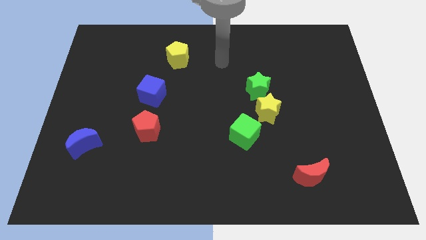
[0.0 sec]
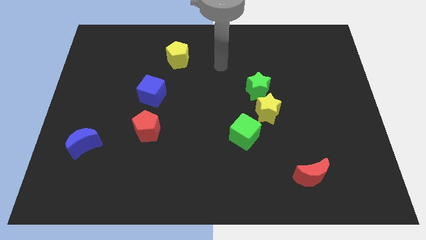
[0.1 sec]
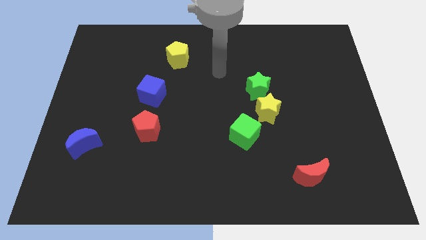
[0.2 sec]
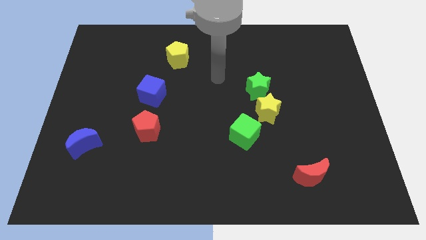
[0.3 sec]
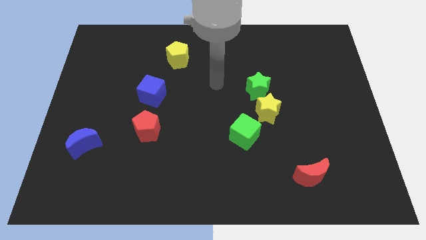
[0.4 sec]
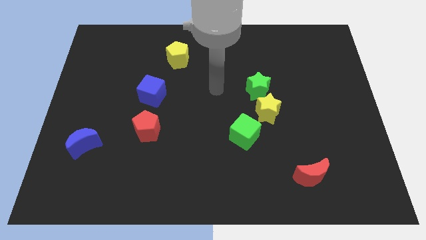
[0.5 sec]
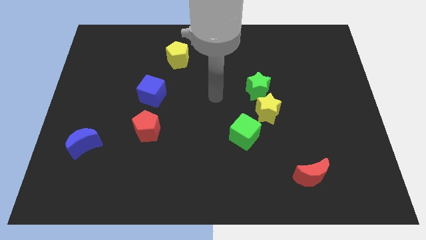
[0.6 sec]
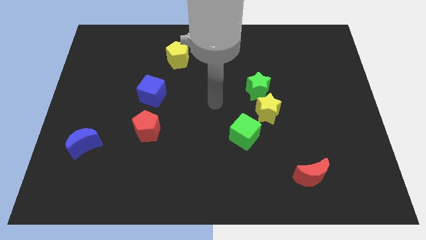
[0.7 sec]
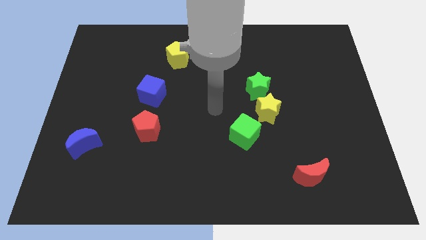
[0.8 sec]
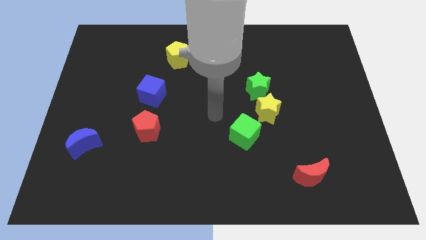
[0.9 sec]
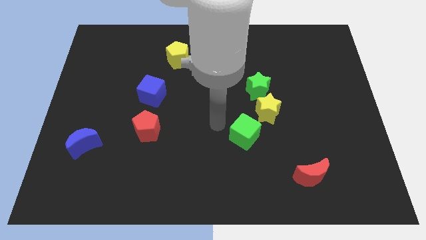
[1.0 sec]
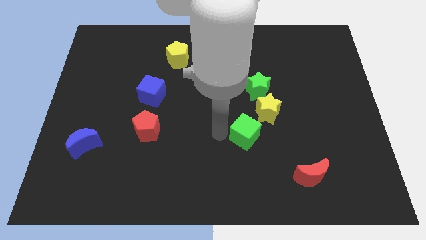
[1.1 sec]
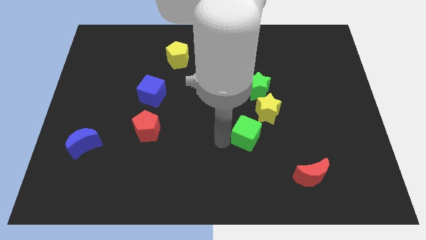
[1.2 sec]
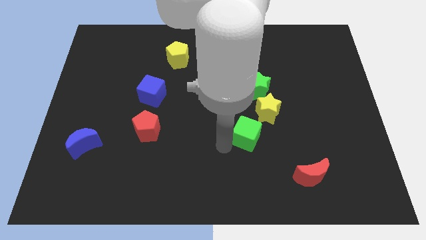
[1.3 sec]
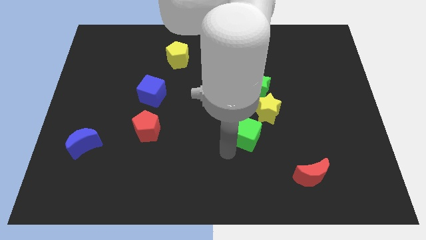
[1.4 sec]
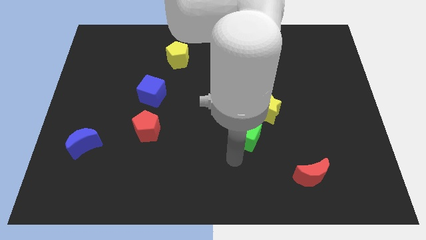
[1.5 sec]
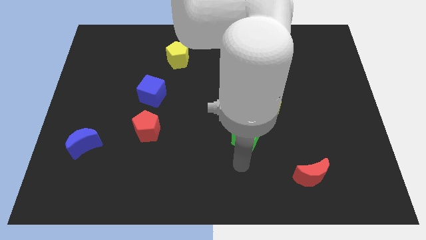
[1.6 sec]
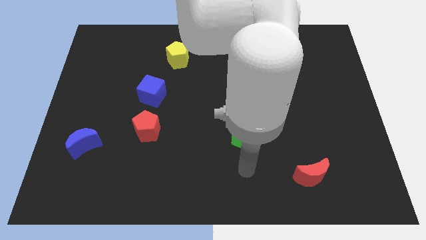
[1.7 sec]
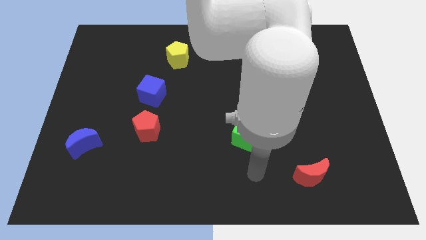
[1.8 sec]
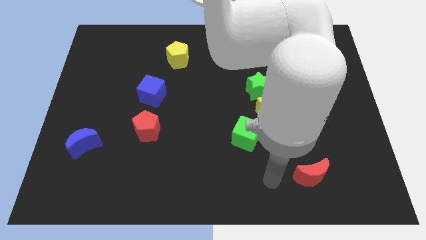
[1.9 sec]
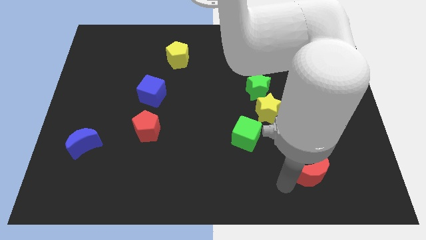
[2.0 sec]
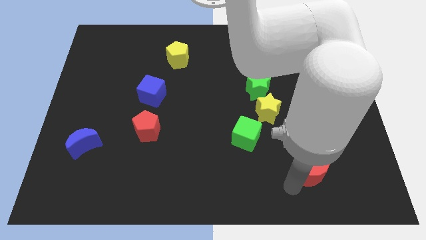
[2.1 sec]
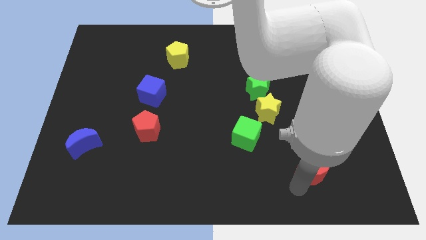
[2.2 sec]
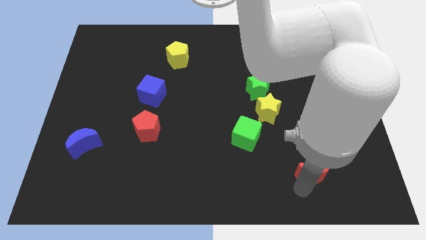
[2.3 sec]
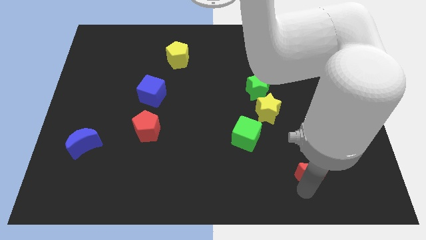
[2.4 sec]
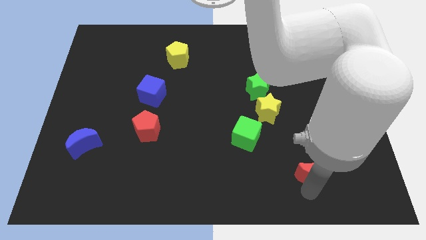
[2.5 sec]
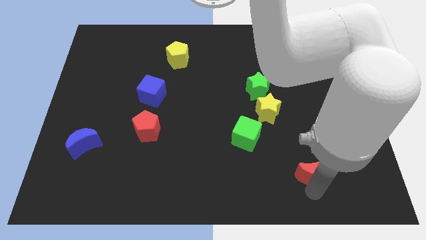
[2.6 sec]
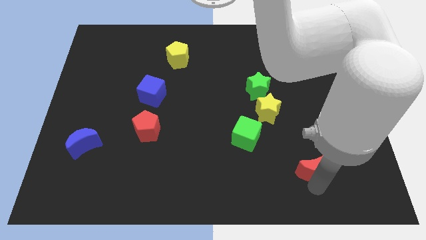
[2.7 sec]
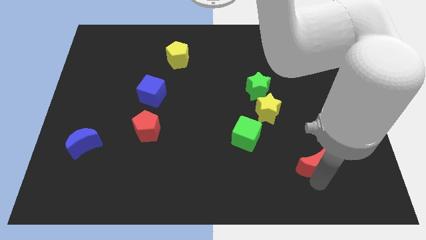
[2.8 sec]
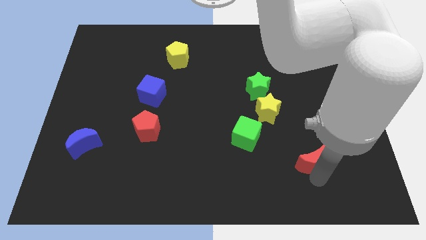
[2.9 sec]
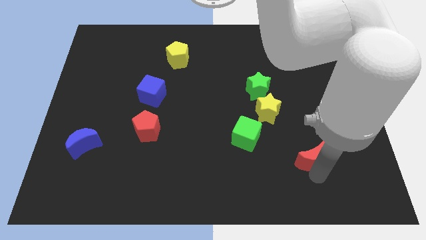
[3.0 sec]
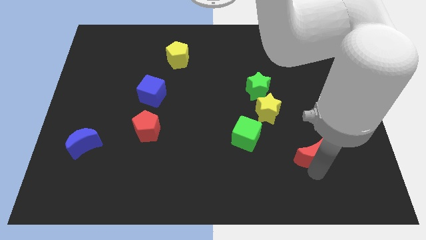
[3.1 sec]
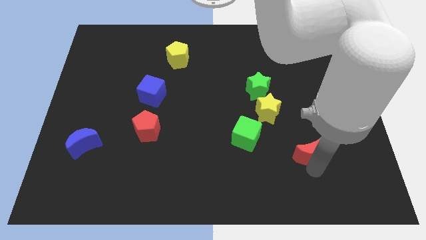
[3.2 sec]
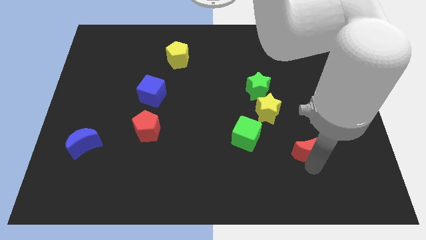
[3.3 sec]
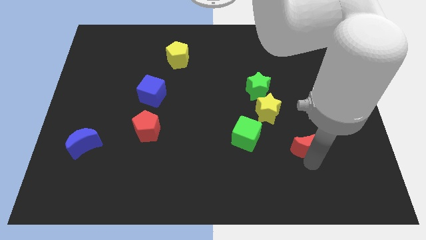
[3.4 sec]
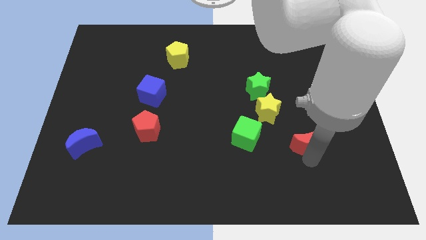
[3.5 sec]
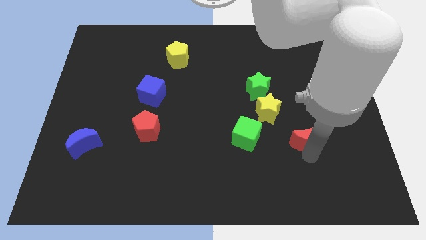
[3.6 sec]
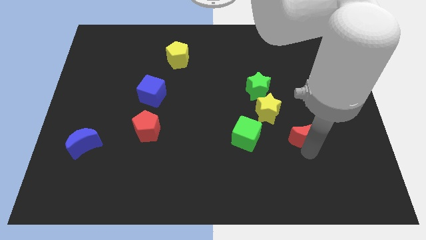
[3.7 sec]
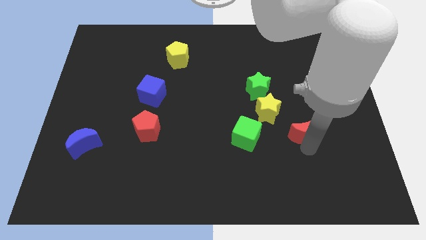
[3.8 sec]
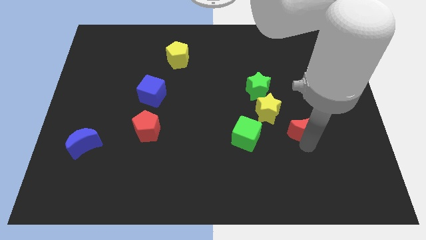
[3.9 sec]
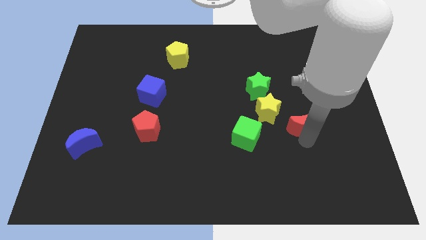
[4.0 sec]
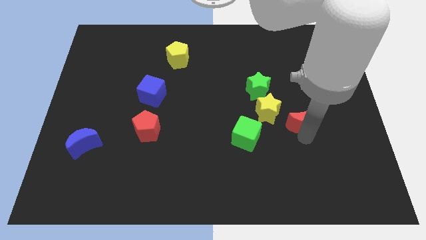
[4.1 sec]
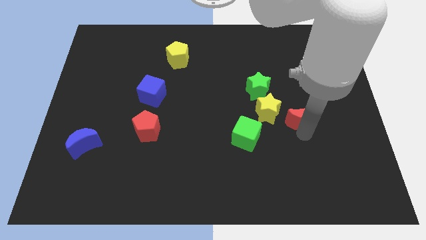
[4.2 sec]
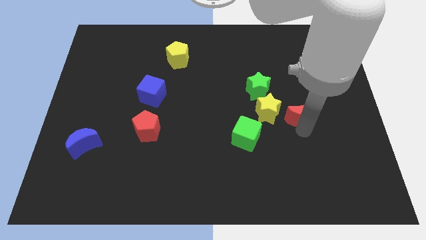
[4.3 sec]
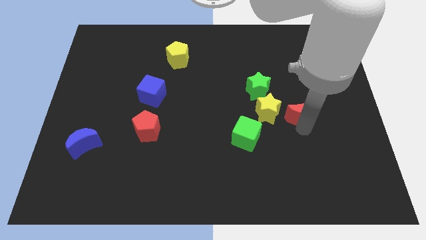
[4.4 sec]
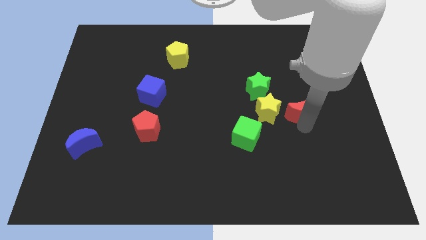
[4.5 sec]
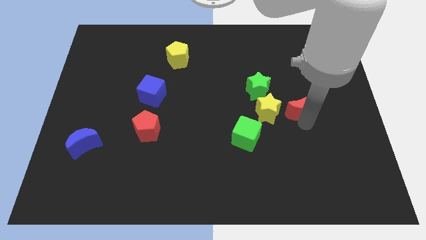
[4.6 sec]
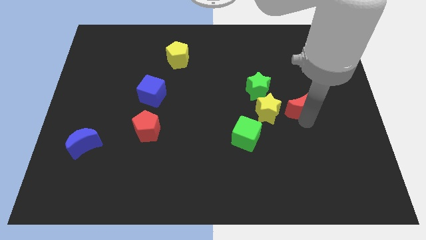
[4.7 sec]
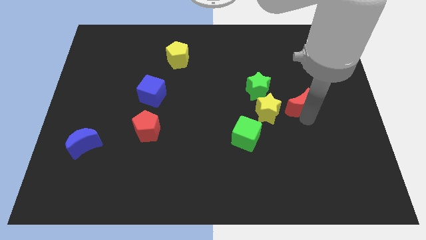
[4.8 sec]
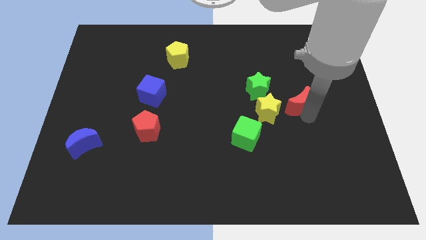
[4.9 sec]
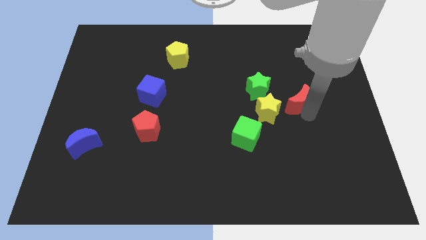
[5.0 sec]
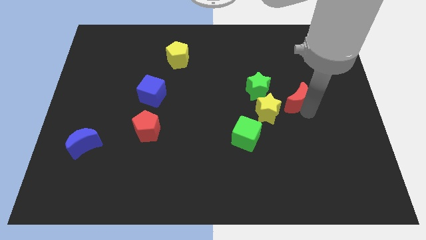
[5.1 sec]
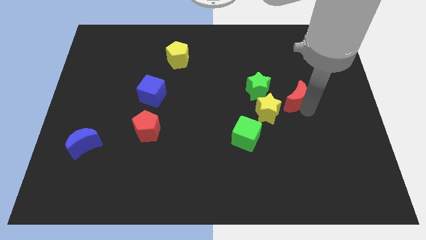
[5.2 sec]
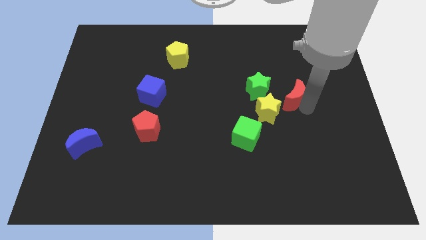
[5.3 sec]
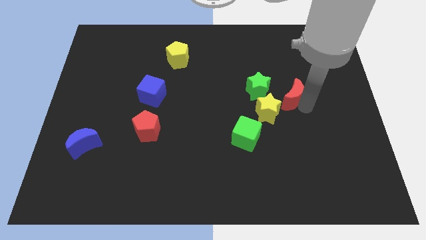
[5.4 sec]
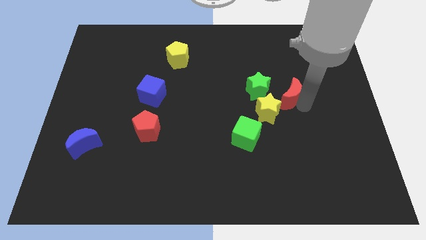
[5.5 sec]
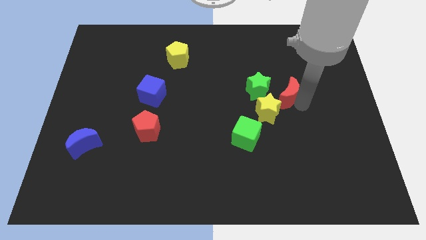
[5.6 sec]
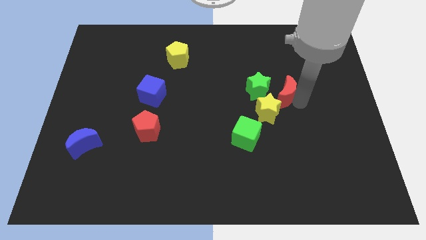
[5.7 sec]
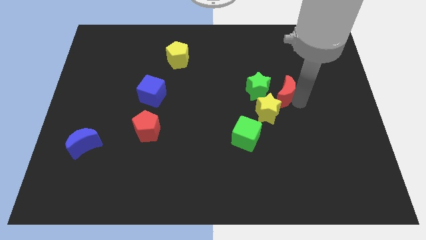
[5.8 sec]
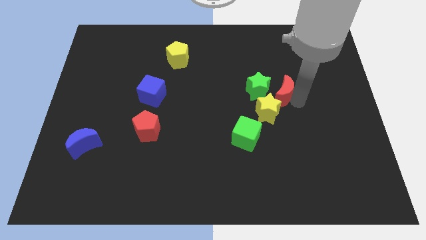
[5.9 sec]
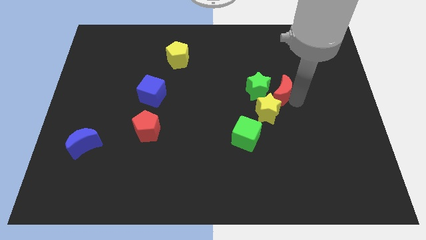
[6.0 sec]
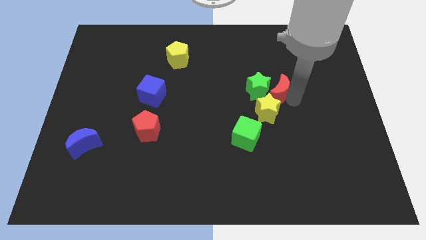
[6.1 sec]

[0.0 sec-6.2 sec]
push the red moon next to the green star

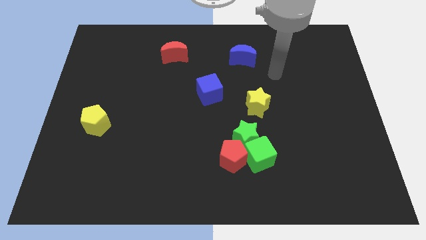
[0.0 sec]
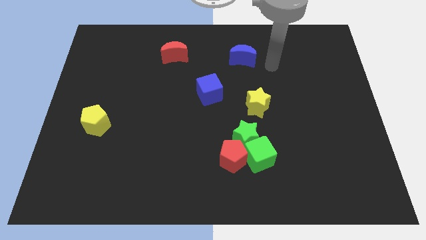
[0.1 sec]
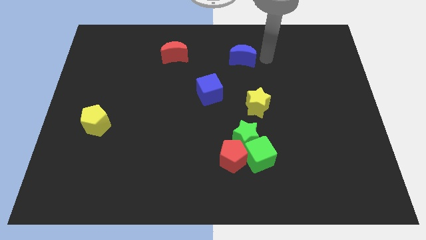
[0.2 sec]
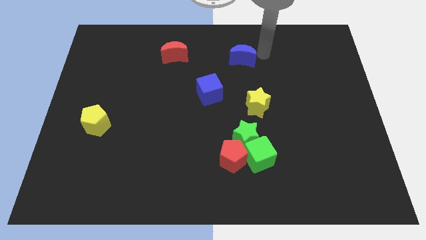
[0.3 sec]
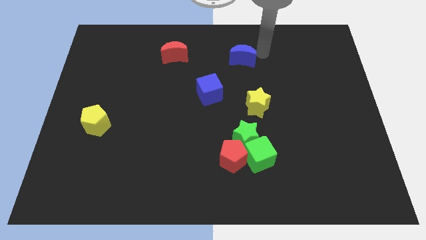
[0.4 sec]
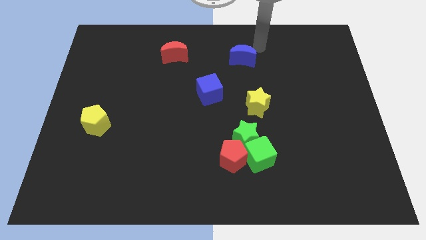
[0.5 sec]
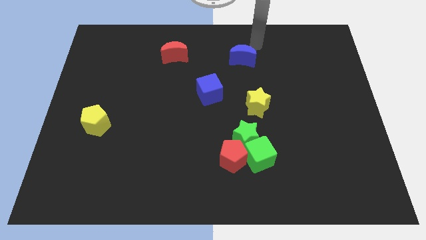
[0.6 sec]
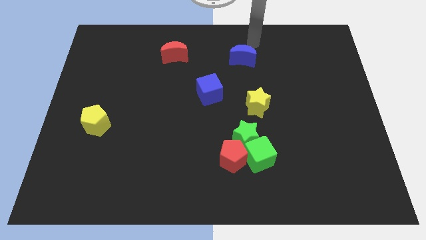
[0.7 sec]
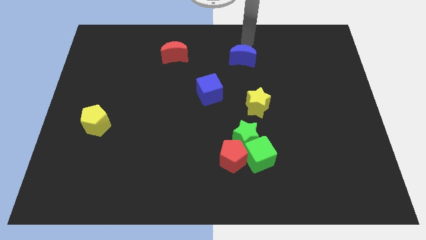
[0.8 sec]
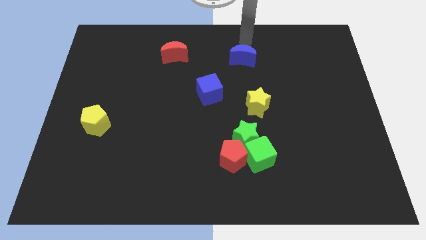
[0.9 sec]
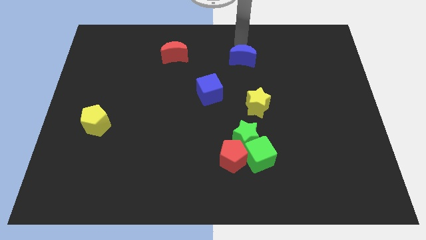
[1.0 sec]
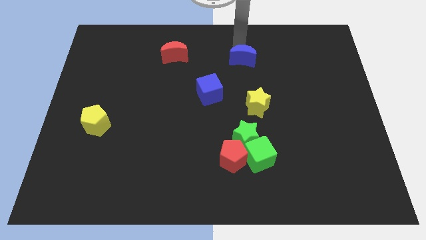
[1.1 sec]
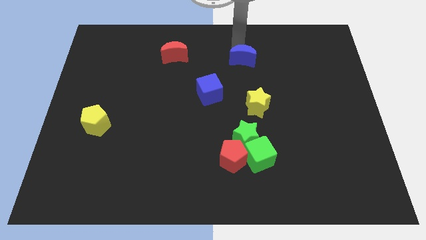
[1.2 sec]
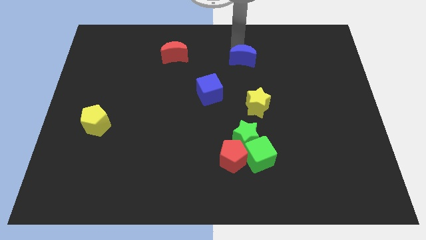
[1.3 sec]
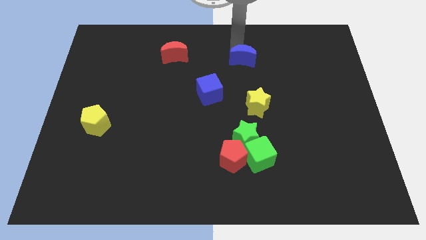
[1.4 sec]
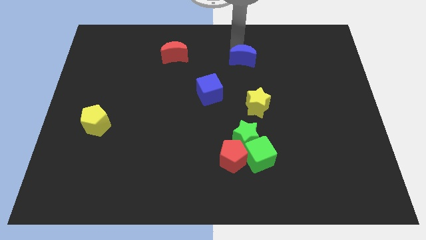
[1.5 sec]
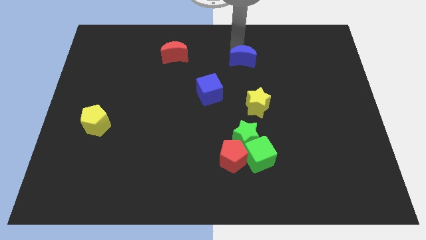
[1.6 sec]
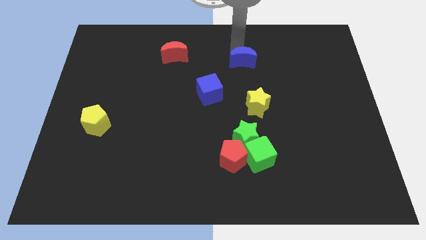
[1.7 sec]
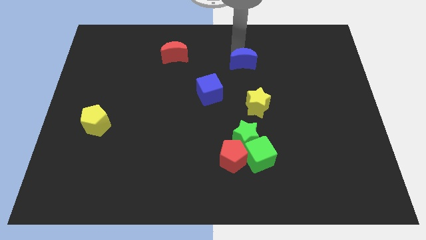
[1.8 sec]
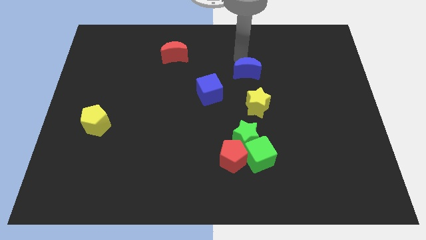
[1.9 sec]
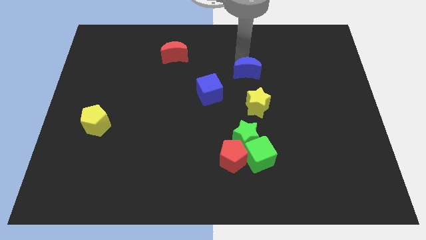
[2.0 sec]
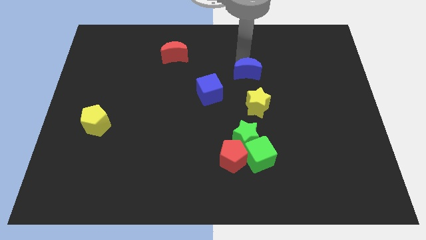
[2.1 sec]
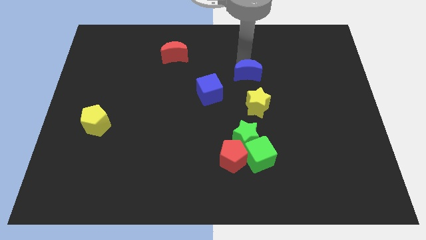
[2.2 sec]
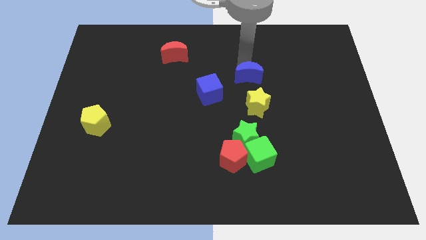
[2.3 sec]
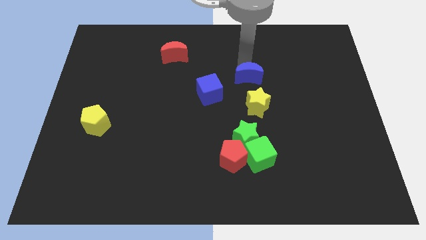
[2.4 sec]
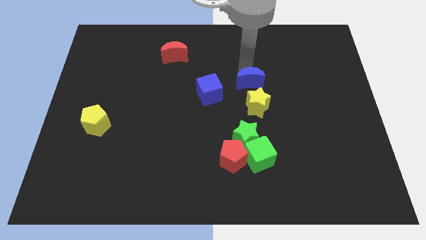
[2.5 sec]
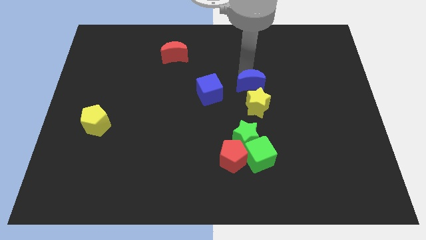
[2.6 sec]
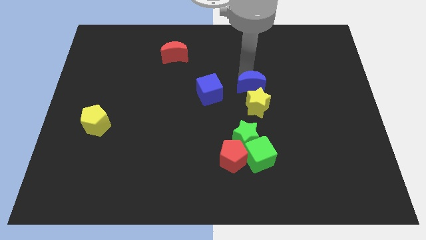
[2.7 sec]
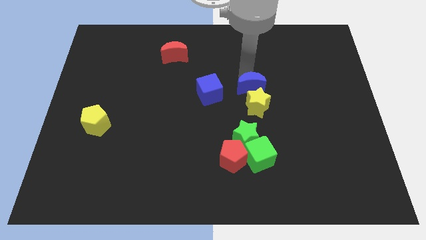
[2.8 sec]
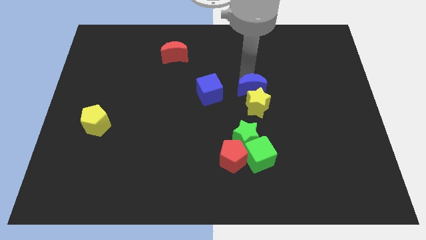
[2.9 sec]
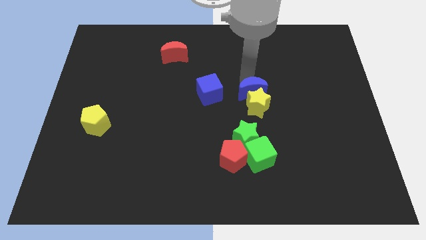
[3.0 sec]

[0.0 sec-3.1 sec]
slide the blue moon to the yellow star
